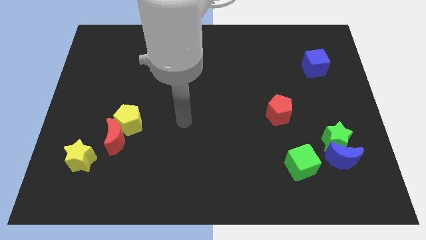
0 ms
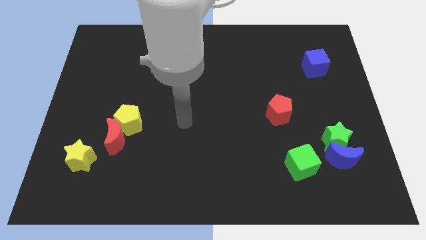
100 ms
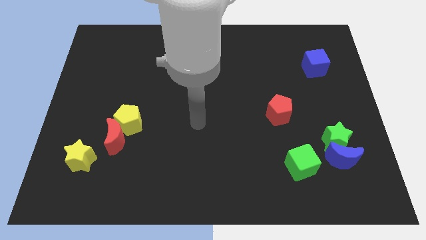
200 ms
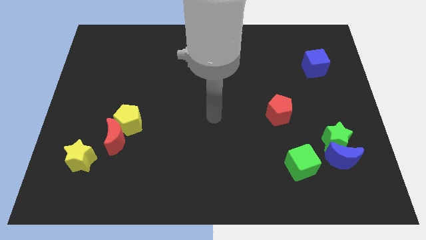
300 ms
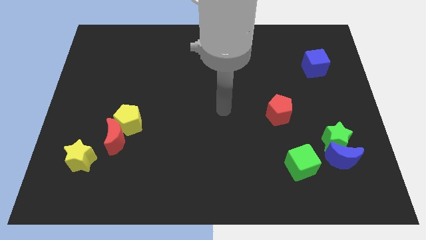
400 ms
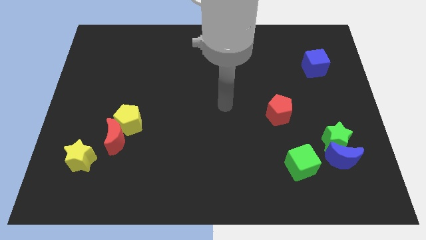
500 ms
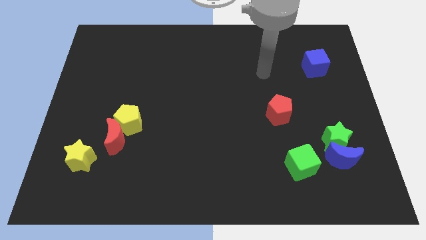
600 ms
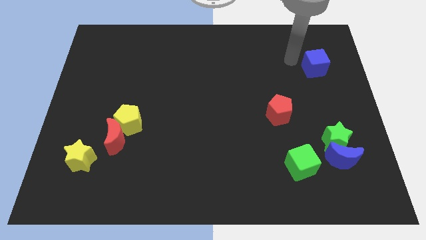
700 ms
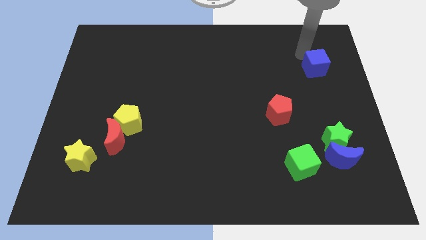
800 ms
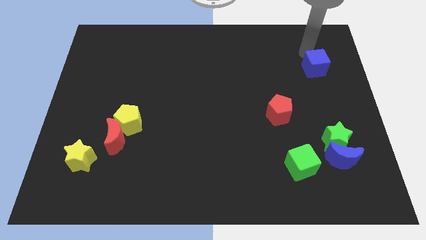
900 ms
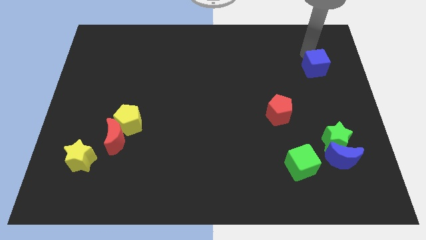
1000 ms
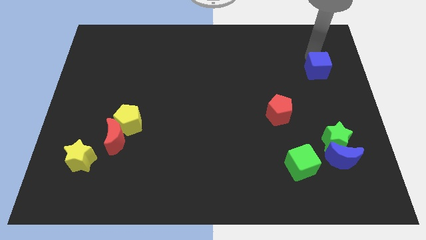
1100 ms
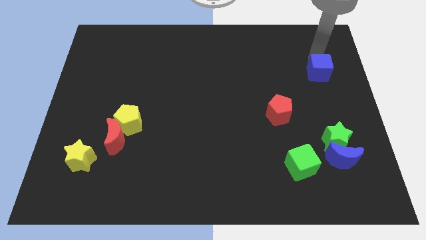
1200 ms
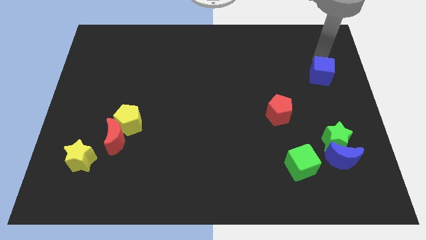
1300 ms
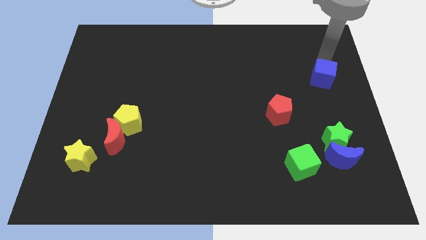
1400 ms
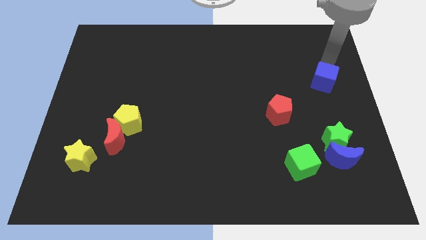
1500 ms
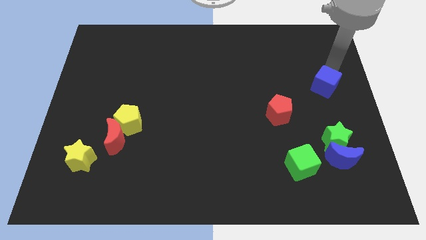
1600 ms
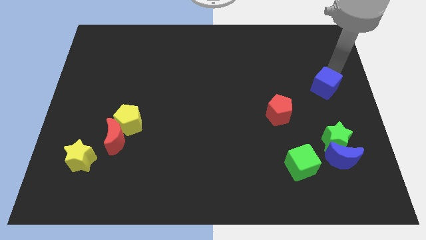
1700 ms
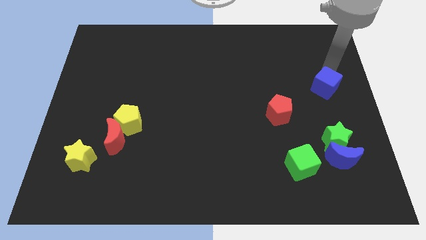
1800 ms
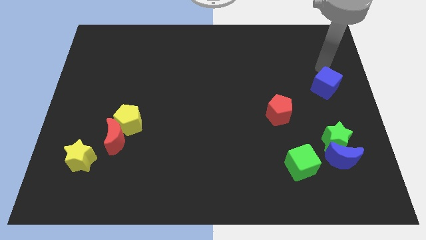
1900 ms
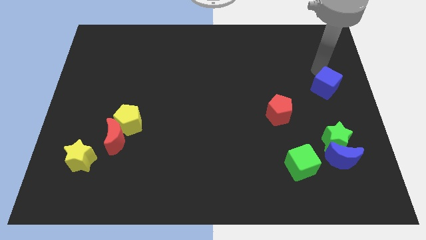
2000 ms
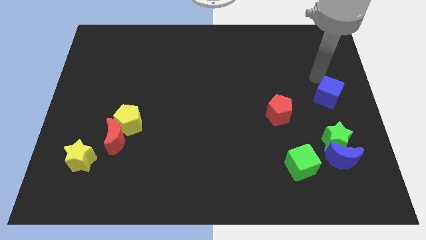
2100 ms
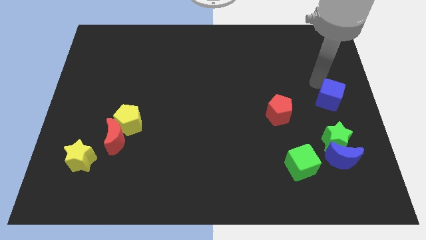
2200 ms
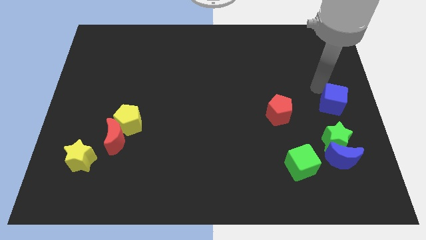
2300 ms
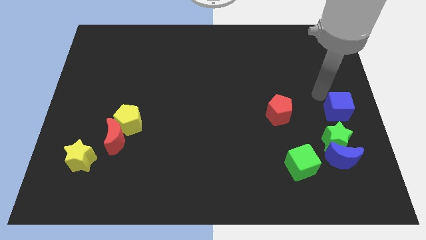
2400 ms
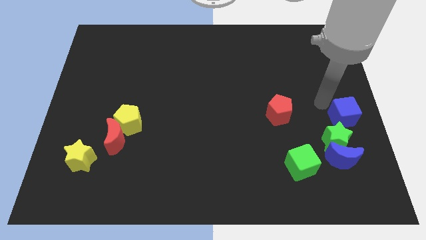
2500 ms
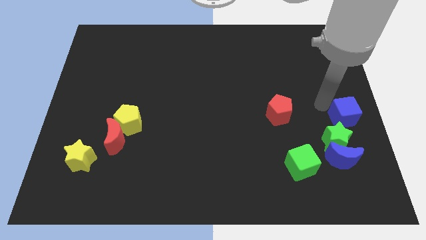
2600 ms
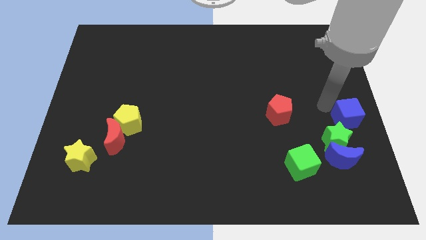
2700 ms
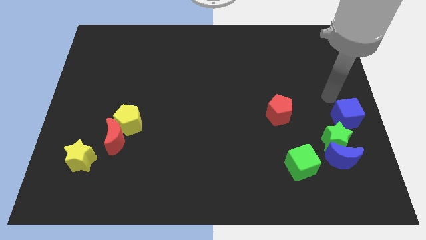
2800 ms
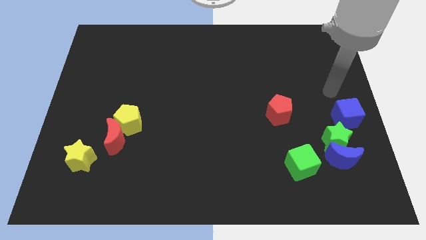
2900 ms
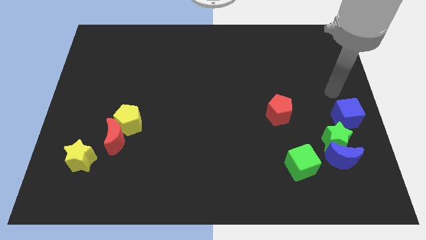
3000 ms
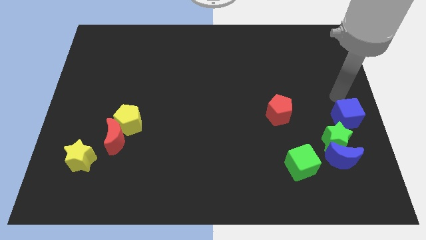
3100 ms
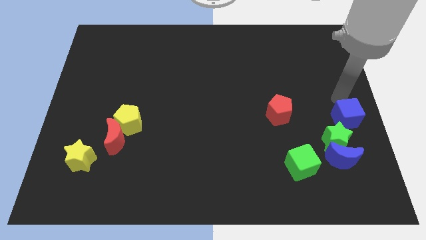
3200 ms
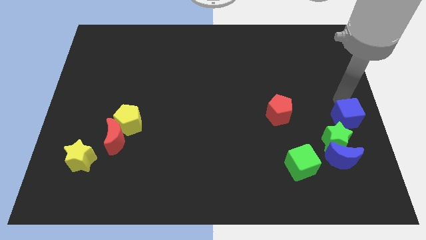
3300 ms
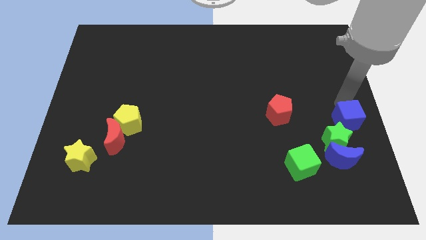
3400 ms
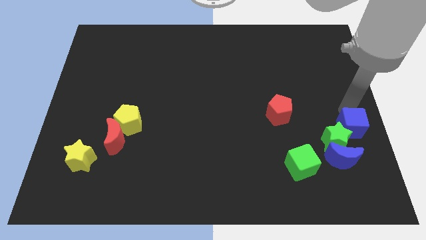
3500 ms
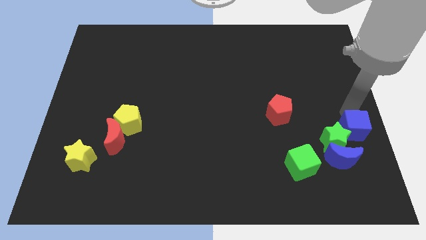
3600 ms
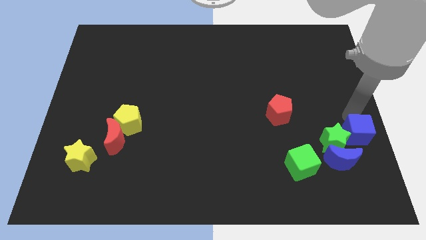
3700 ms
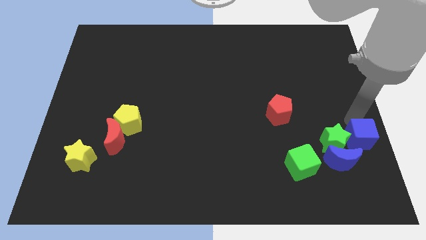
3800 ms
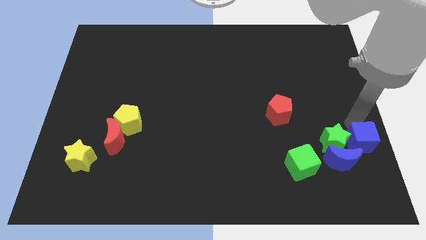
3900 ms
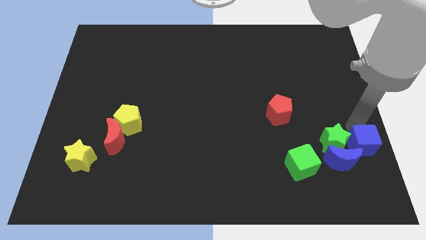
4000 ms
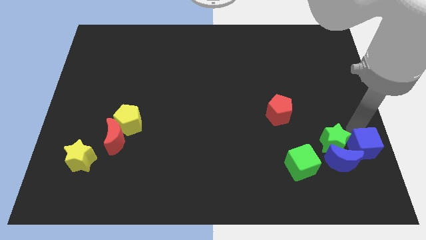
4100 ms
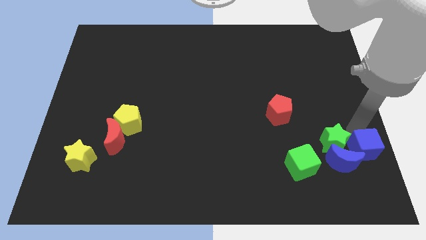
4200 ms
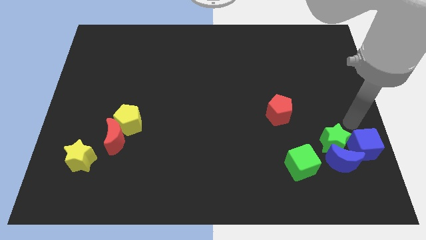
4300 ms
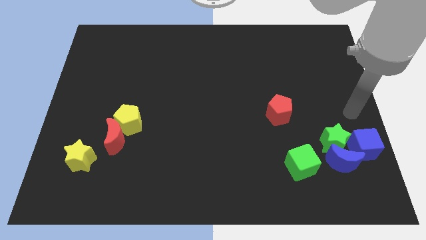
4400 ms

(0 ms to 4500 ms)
move the blue cube next to the blue moon

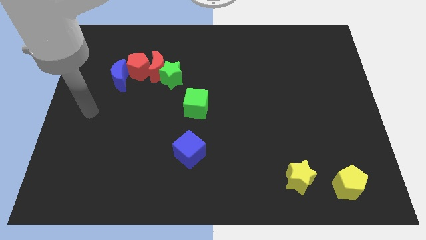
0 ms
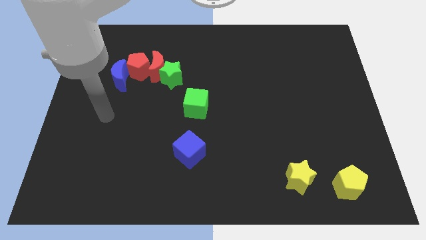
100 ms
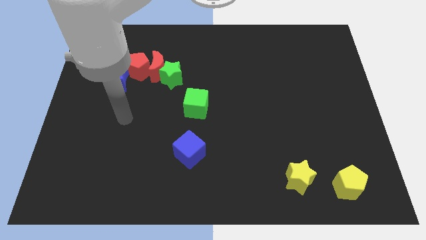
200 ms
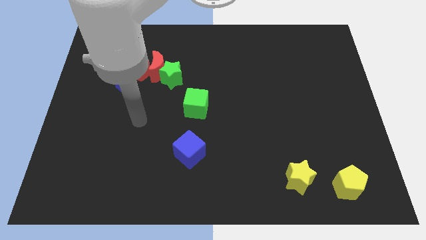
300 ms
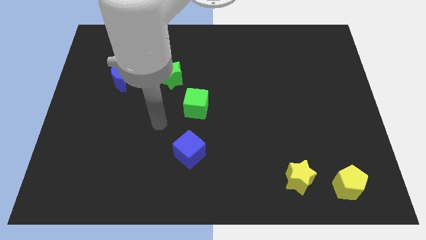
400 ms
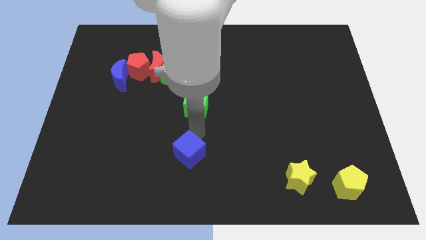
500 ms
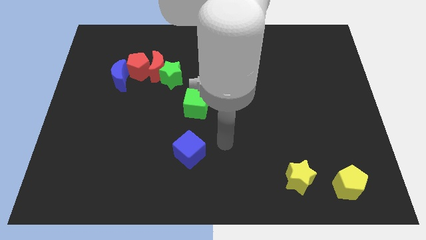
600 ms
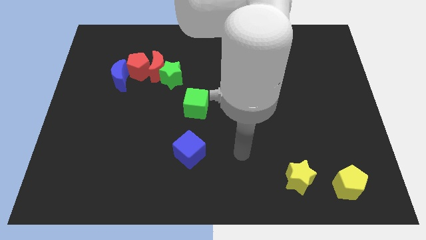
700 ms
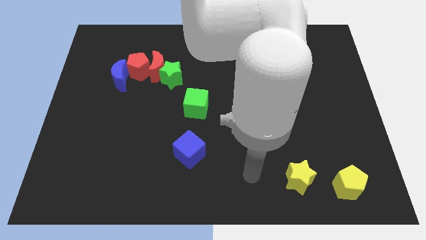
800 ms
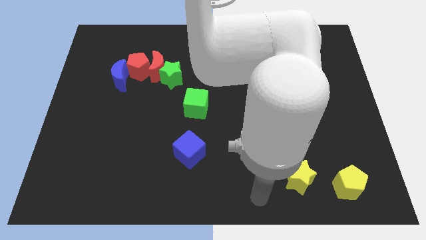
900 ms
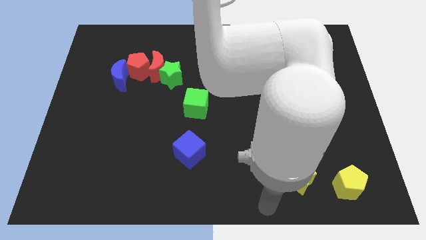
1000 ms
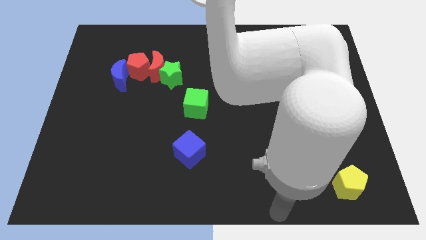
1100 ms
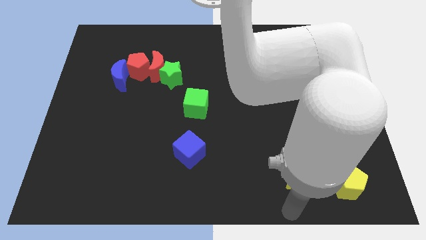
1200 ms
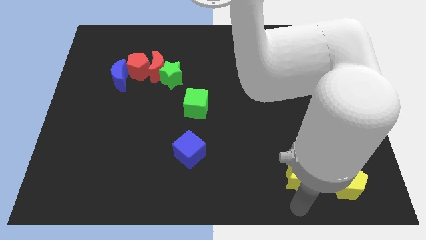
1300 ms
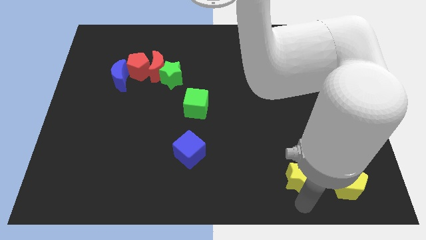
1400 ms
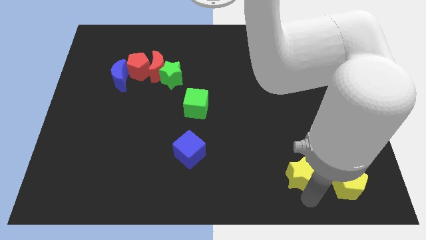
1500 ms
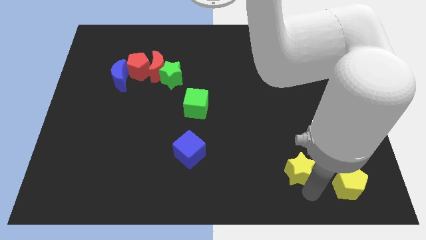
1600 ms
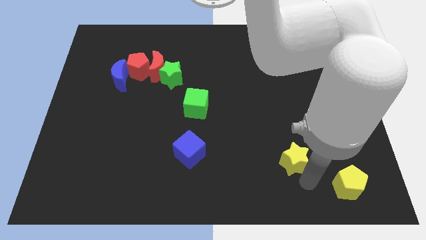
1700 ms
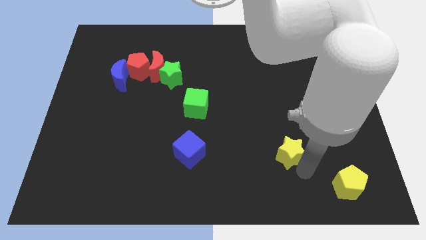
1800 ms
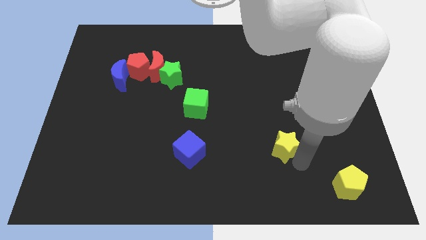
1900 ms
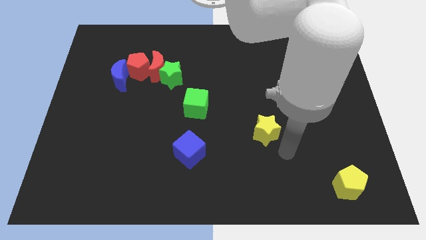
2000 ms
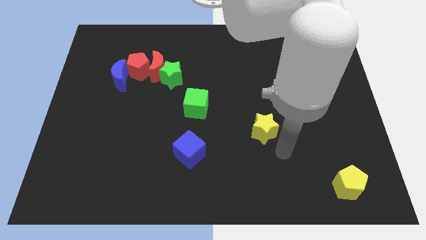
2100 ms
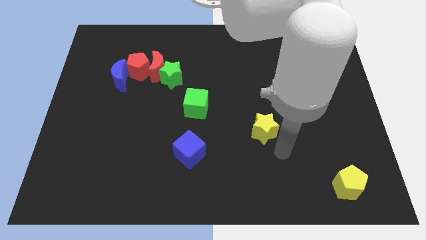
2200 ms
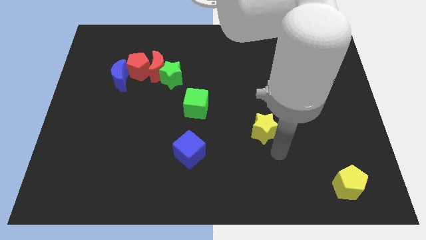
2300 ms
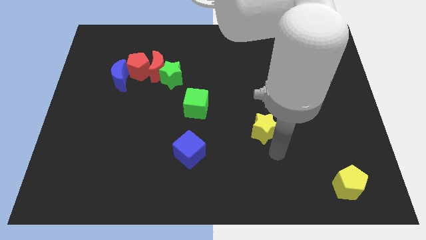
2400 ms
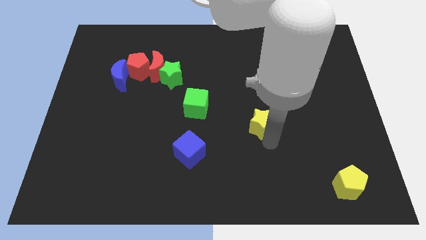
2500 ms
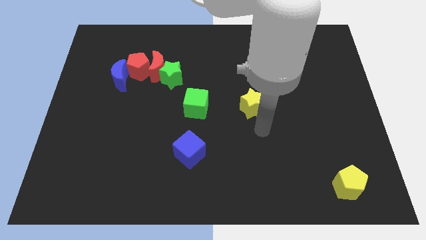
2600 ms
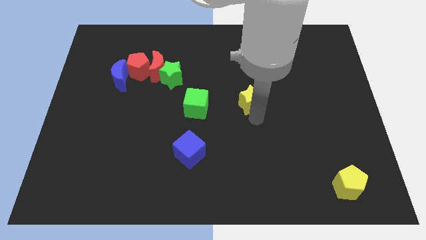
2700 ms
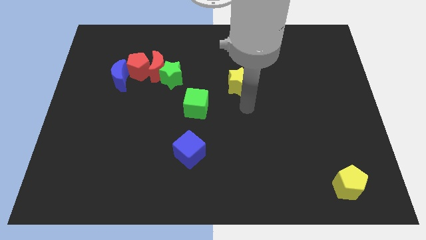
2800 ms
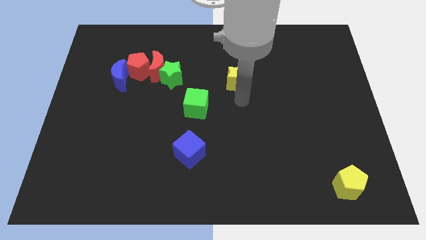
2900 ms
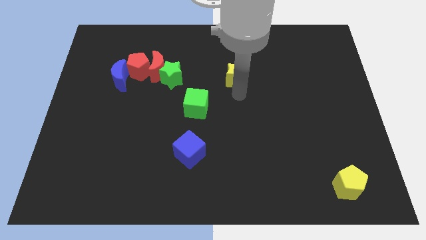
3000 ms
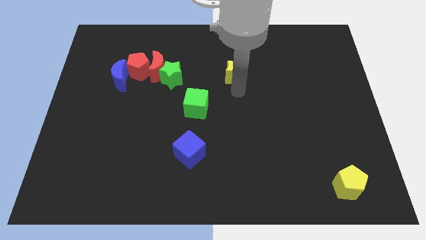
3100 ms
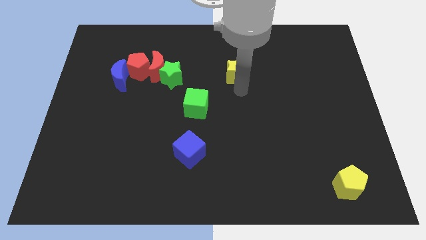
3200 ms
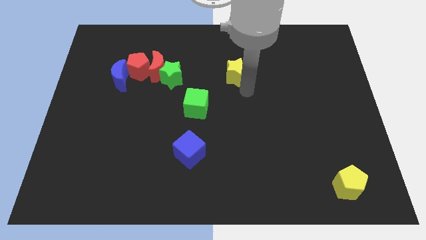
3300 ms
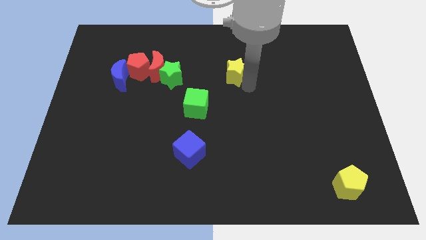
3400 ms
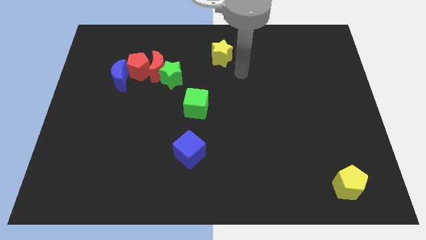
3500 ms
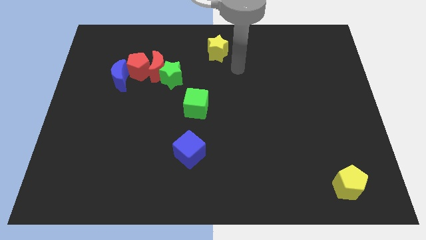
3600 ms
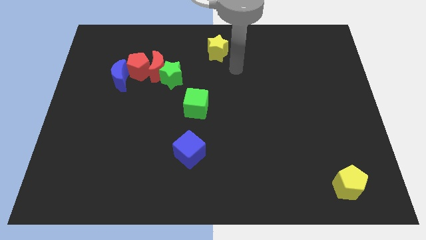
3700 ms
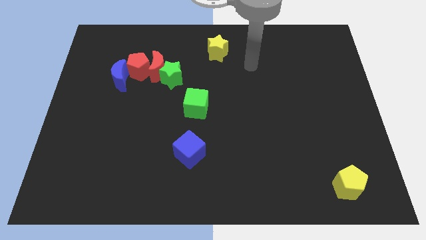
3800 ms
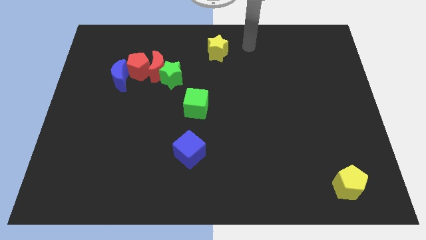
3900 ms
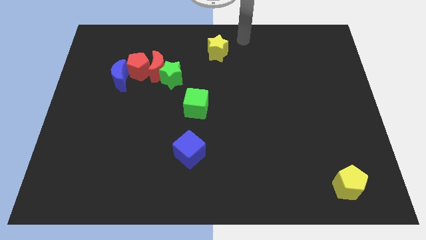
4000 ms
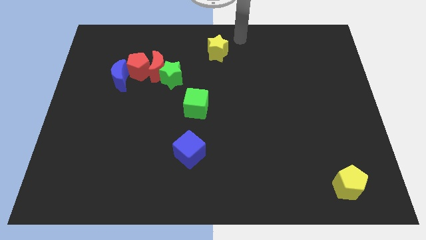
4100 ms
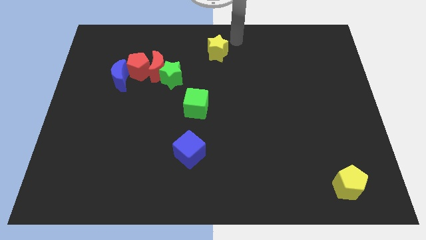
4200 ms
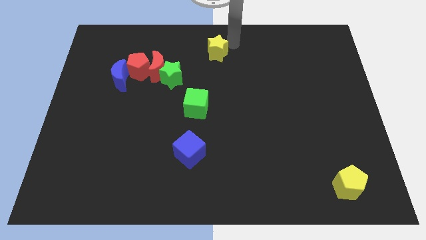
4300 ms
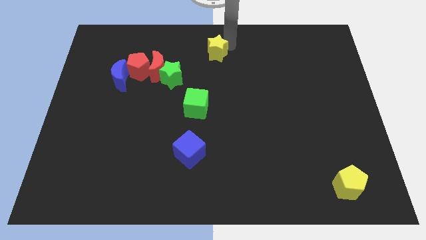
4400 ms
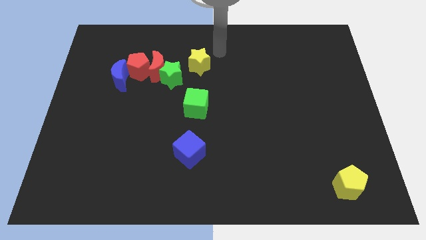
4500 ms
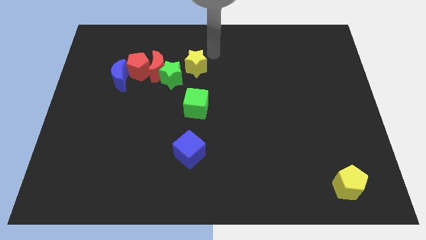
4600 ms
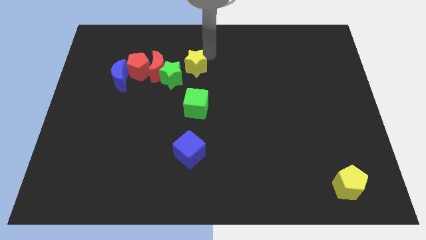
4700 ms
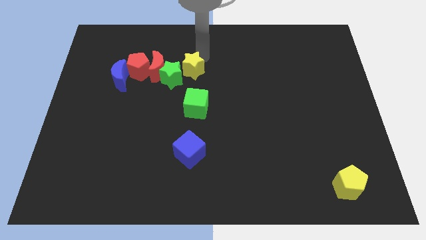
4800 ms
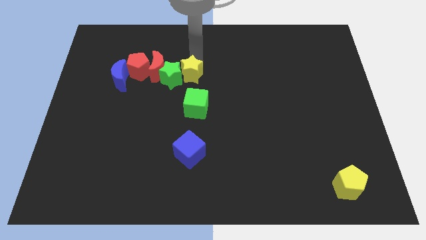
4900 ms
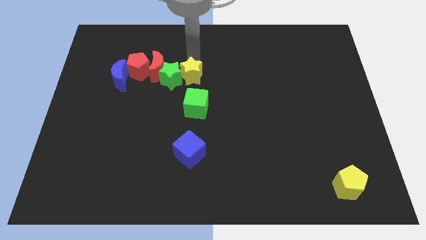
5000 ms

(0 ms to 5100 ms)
move the yellow star towards the green star
